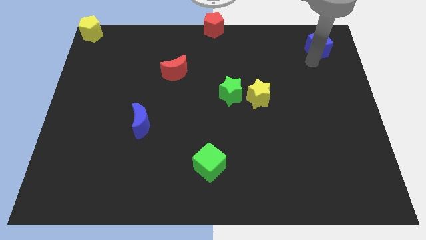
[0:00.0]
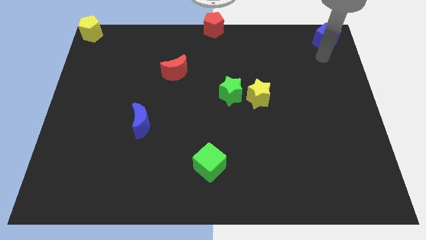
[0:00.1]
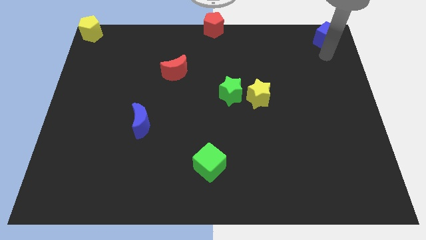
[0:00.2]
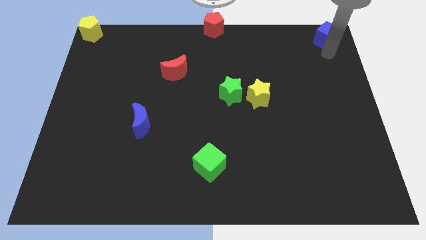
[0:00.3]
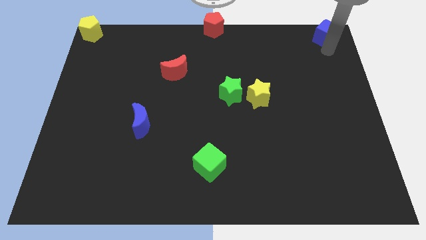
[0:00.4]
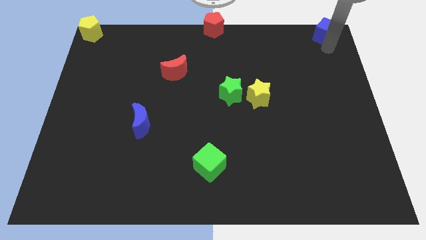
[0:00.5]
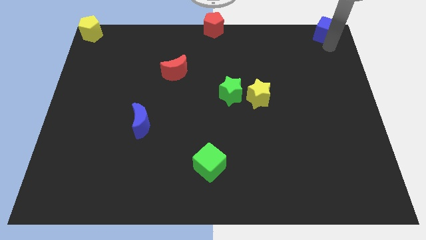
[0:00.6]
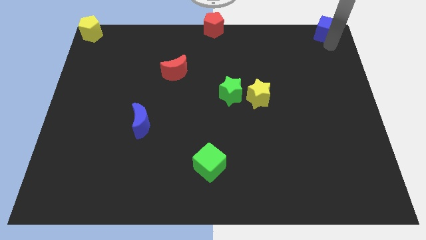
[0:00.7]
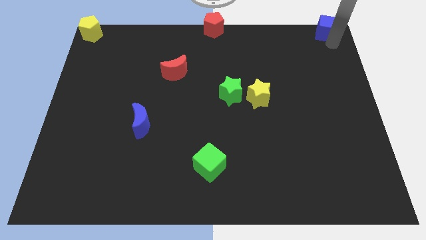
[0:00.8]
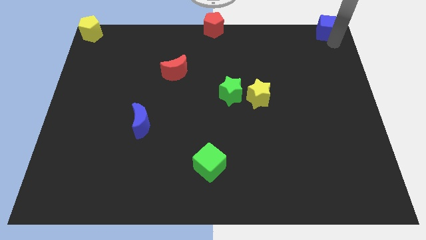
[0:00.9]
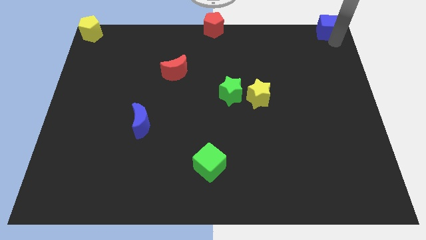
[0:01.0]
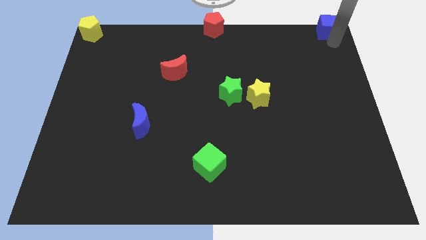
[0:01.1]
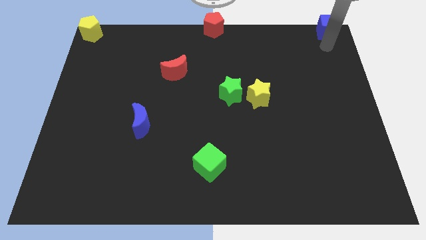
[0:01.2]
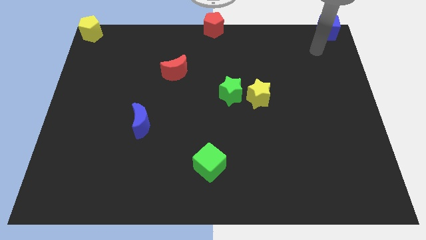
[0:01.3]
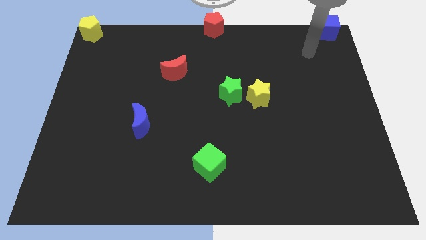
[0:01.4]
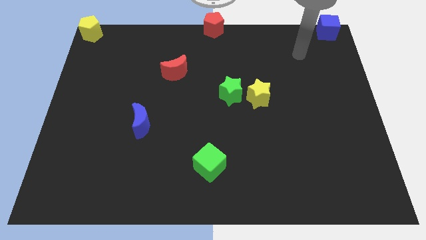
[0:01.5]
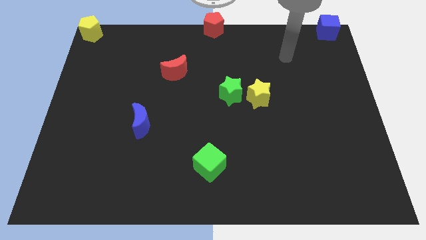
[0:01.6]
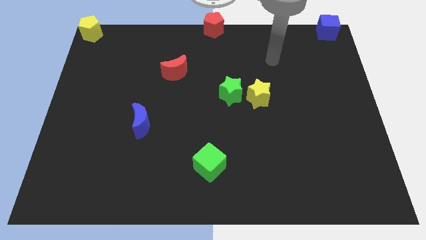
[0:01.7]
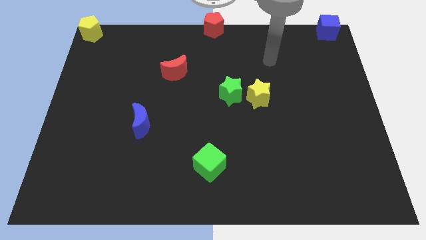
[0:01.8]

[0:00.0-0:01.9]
put the blue cube parallel right to the red pentagon

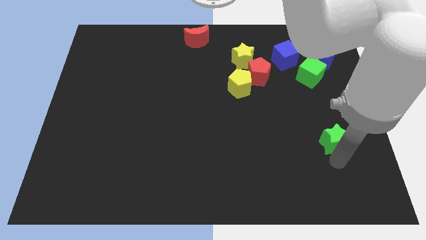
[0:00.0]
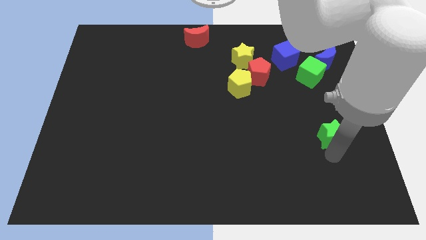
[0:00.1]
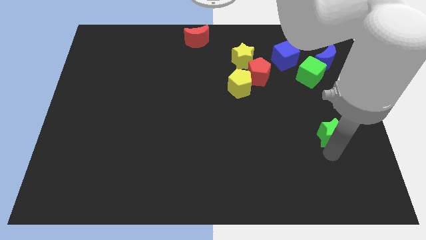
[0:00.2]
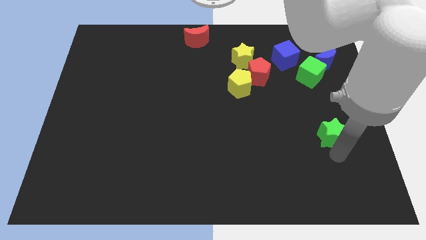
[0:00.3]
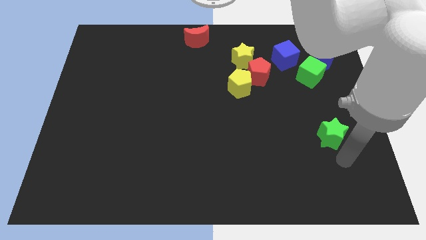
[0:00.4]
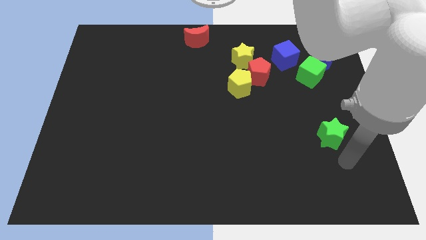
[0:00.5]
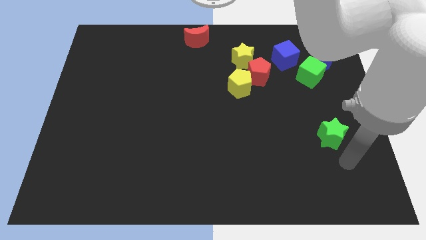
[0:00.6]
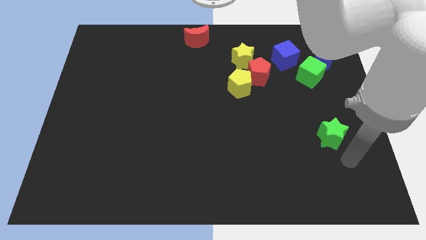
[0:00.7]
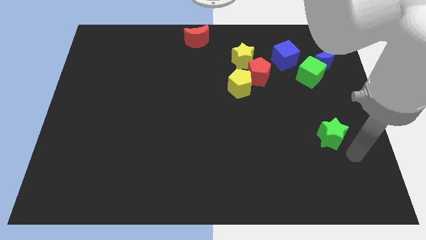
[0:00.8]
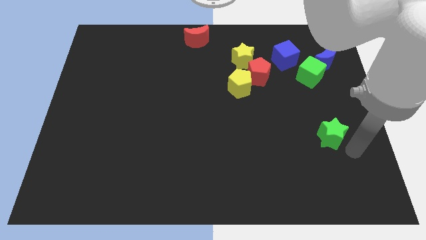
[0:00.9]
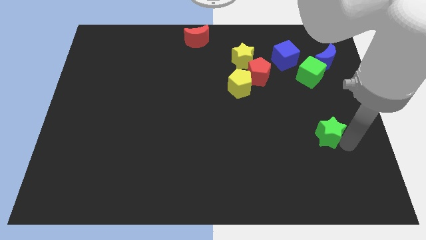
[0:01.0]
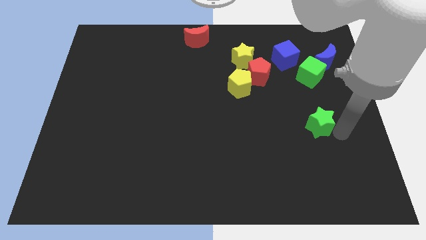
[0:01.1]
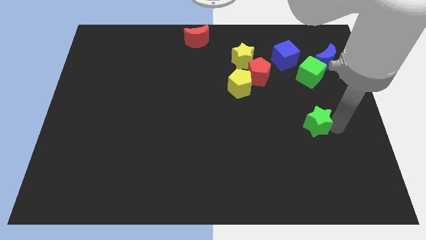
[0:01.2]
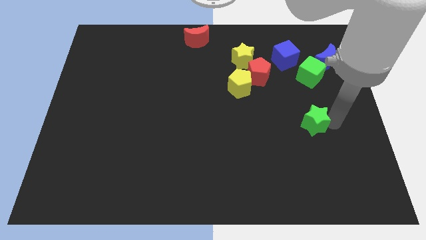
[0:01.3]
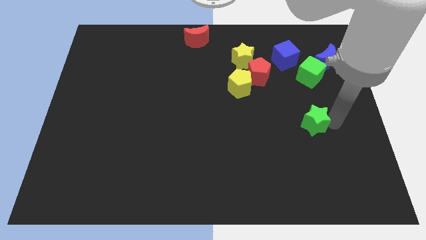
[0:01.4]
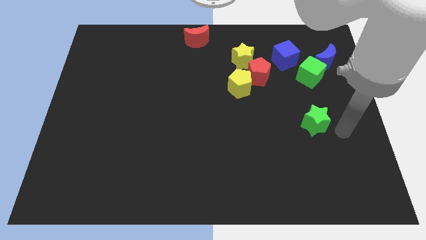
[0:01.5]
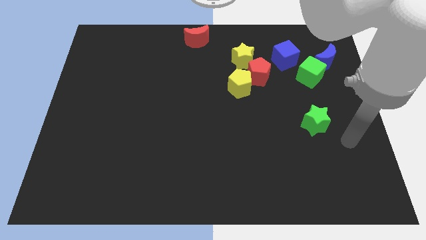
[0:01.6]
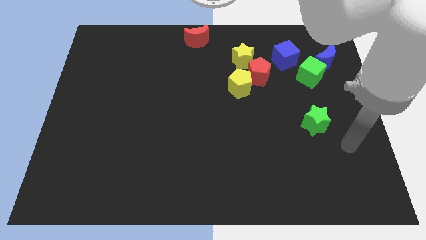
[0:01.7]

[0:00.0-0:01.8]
put the green star vertically below the green cube

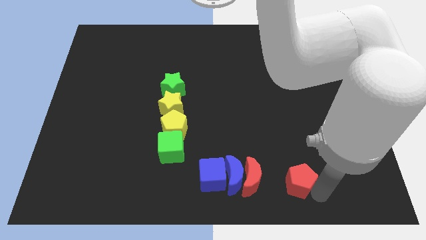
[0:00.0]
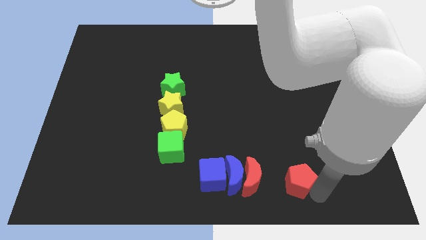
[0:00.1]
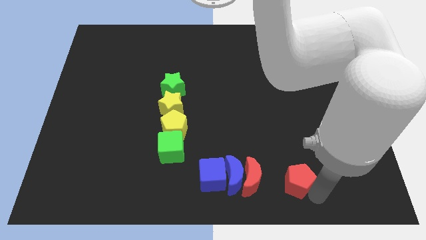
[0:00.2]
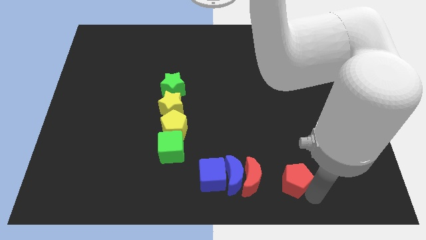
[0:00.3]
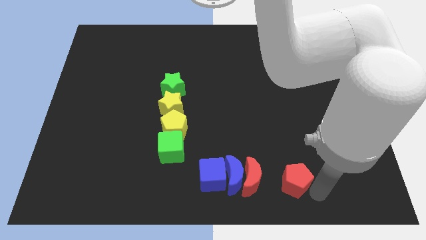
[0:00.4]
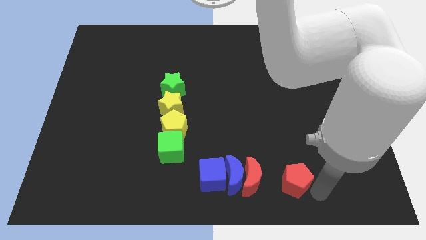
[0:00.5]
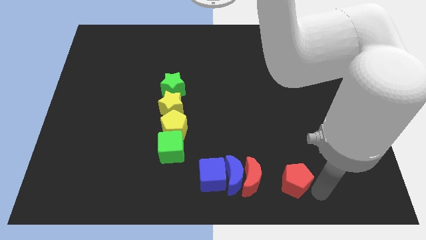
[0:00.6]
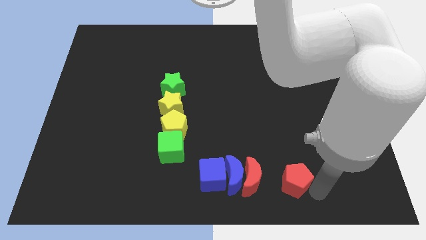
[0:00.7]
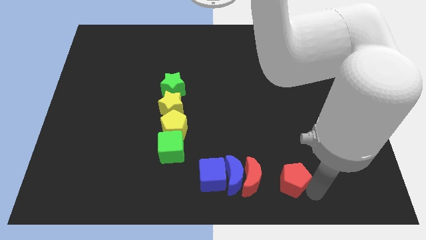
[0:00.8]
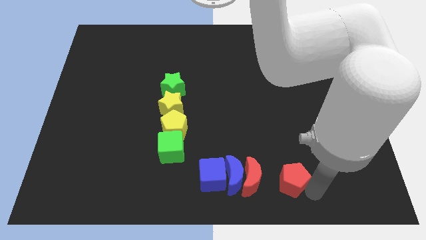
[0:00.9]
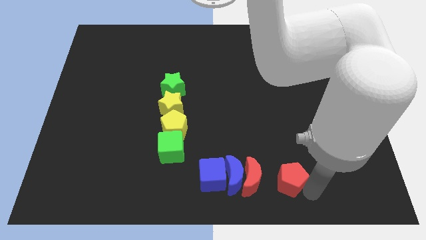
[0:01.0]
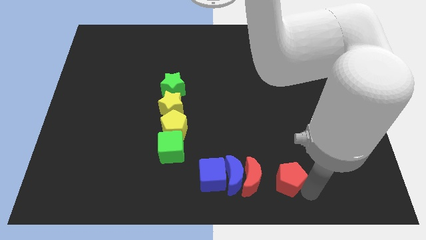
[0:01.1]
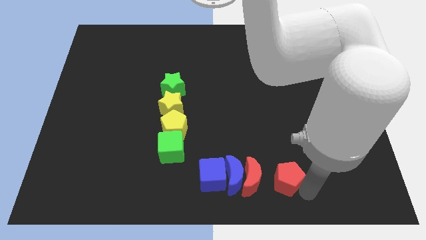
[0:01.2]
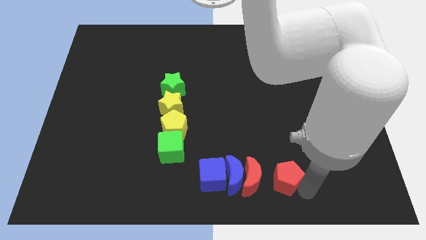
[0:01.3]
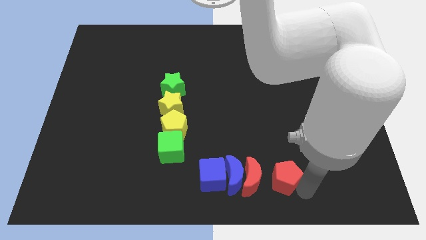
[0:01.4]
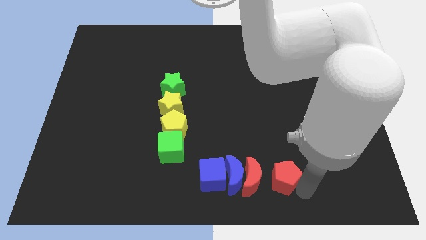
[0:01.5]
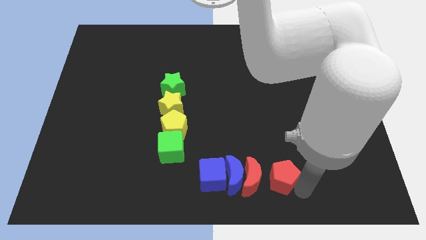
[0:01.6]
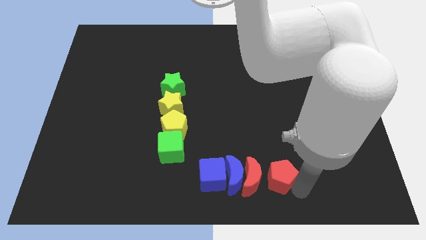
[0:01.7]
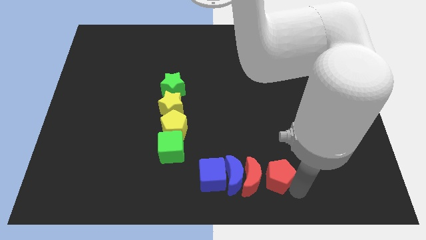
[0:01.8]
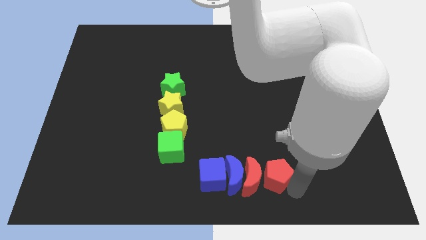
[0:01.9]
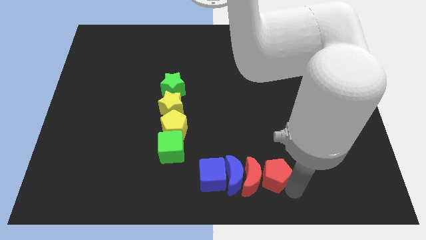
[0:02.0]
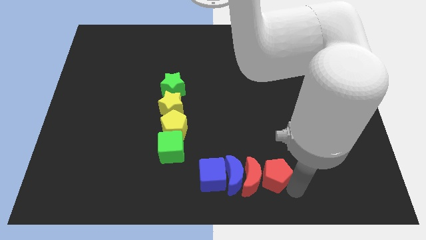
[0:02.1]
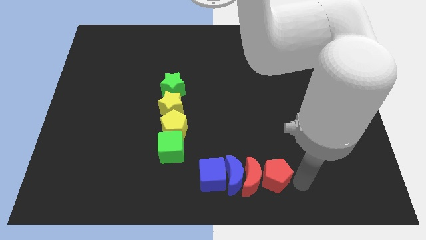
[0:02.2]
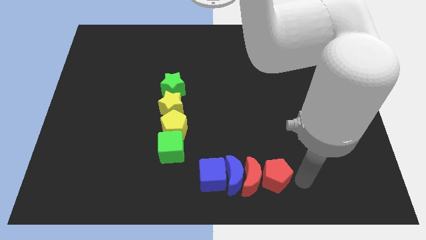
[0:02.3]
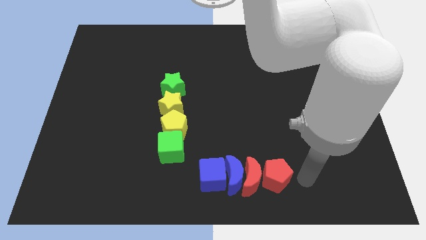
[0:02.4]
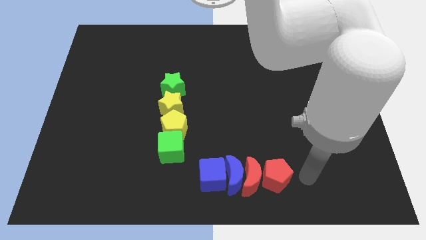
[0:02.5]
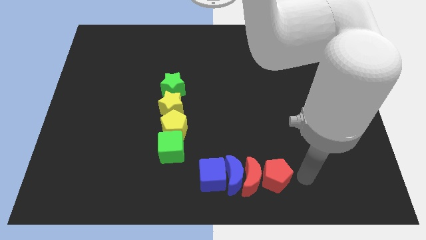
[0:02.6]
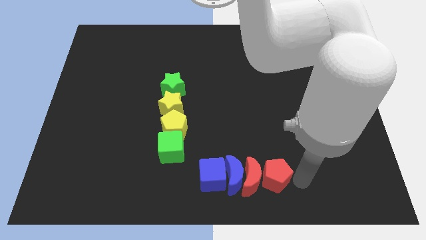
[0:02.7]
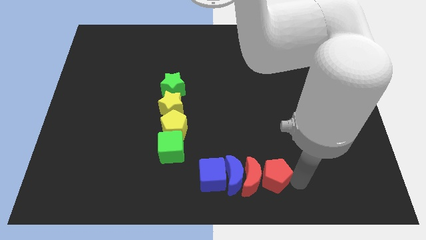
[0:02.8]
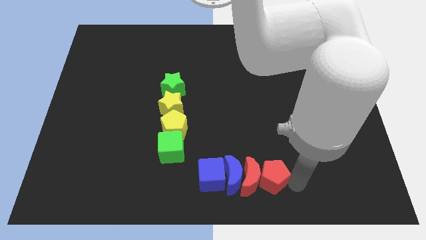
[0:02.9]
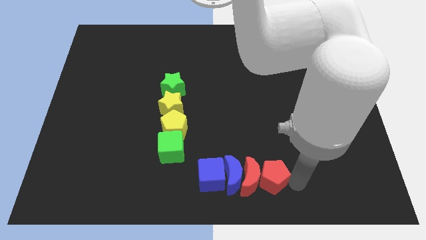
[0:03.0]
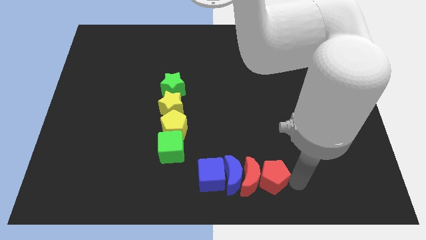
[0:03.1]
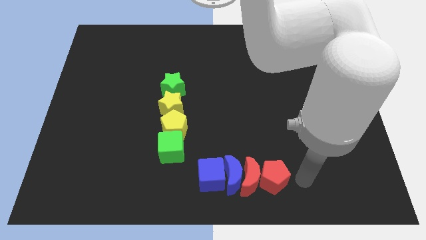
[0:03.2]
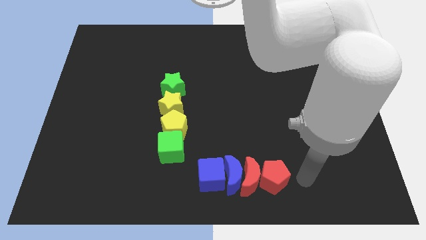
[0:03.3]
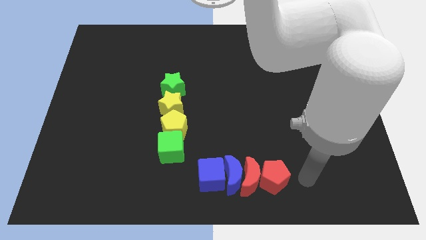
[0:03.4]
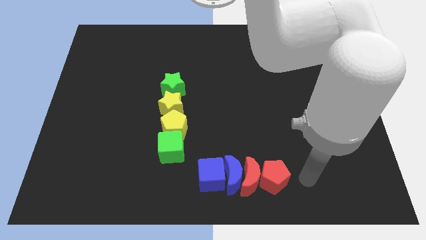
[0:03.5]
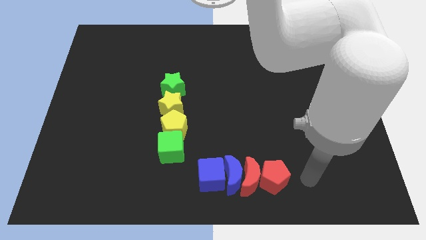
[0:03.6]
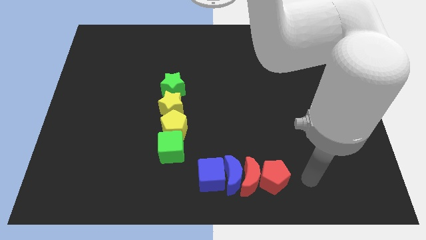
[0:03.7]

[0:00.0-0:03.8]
move the red pentagon into the right side of the horizontal line of blocks

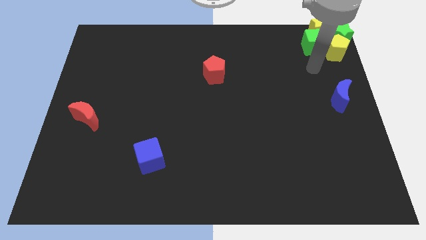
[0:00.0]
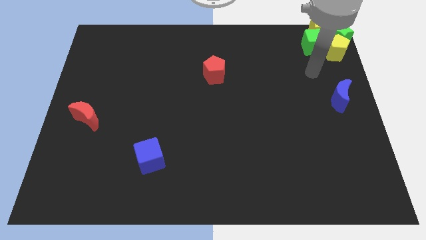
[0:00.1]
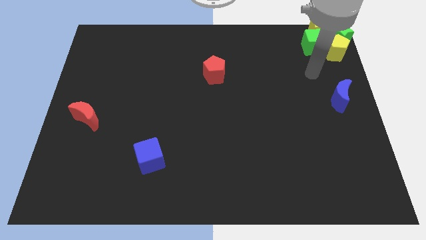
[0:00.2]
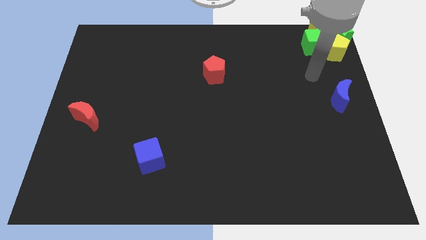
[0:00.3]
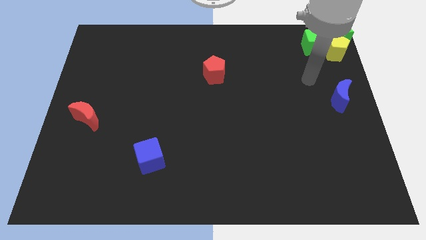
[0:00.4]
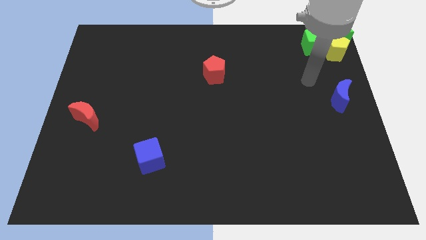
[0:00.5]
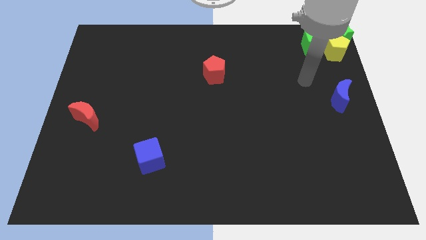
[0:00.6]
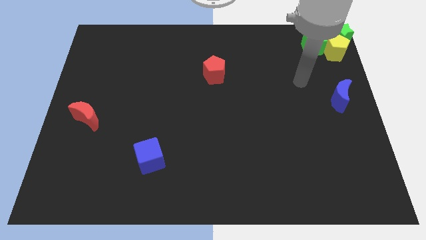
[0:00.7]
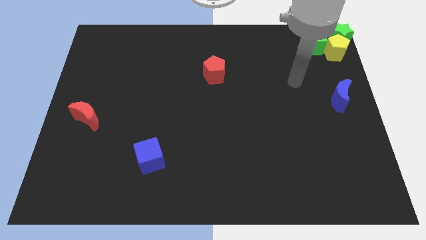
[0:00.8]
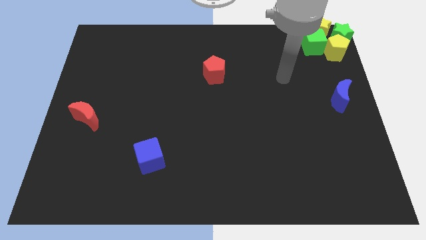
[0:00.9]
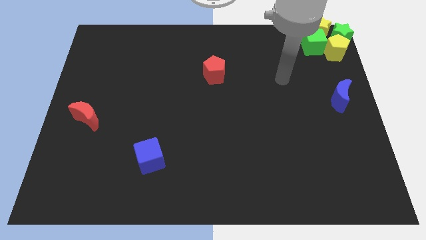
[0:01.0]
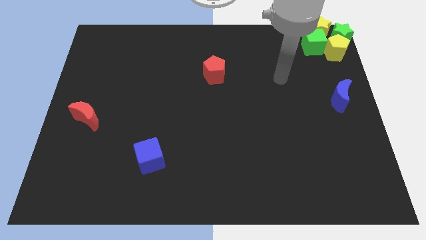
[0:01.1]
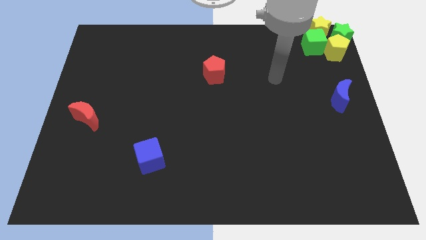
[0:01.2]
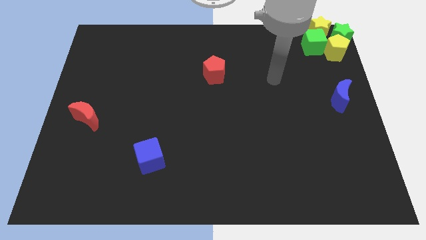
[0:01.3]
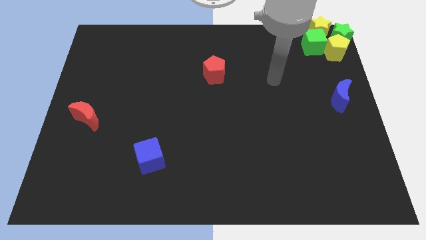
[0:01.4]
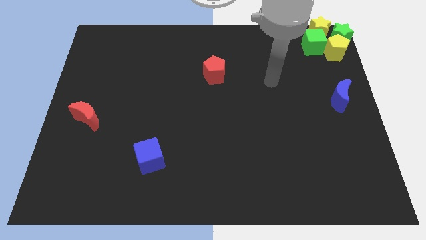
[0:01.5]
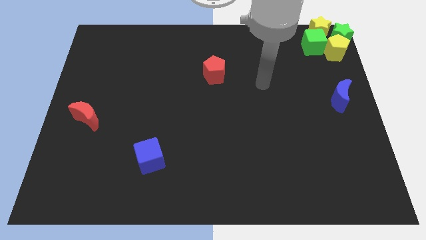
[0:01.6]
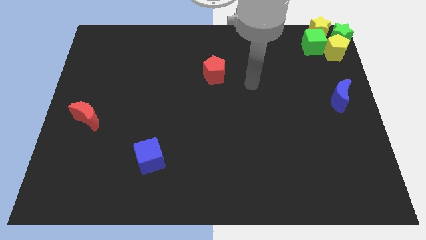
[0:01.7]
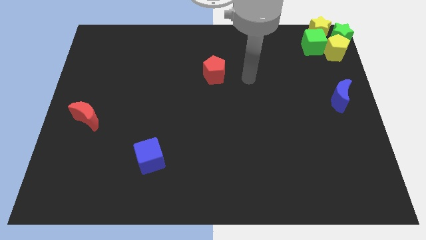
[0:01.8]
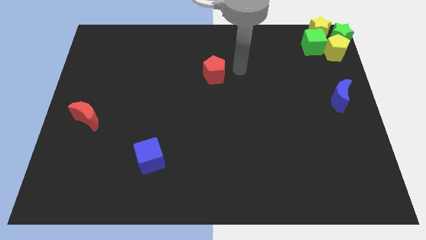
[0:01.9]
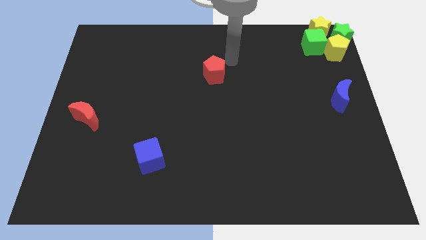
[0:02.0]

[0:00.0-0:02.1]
go away from the group of blocks
